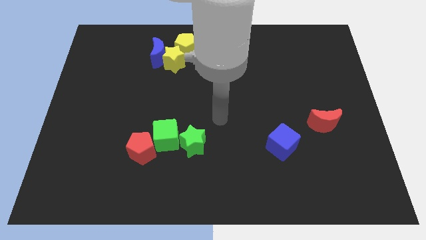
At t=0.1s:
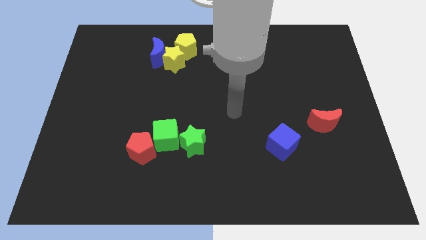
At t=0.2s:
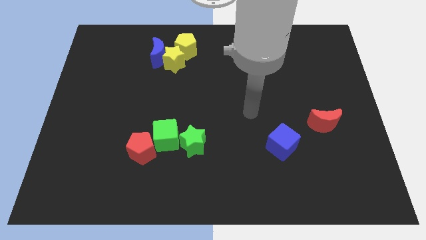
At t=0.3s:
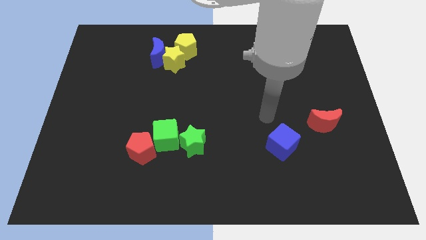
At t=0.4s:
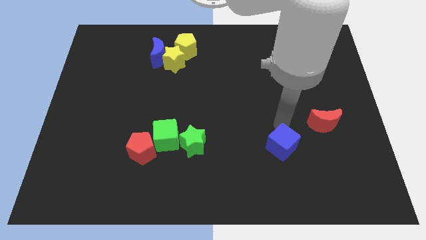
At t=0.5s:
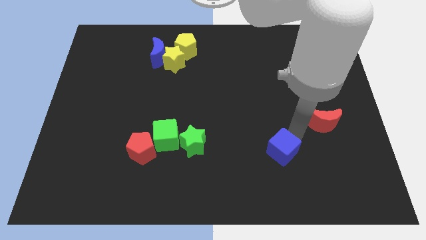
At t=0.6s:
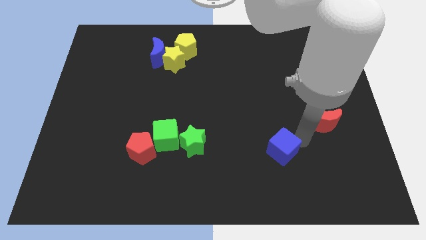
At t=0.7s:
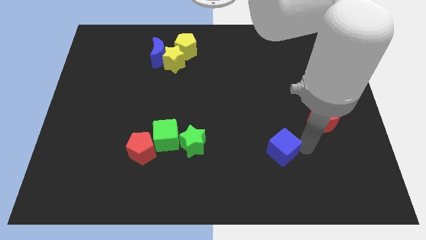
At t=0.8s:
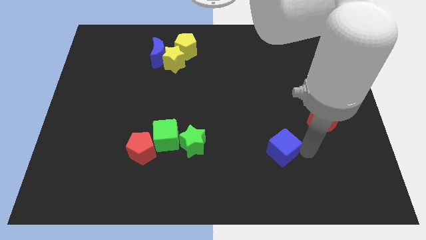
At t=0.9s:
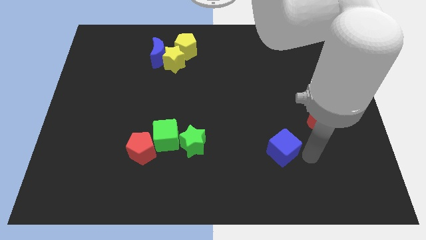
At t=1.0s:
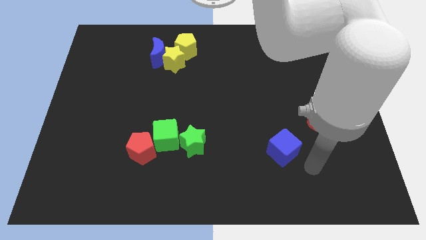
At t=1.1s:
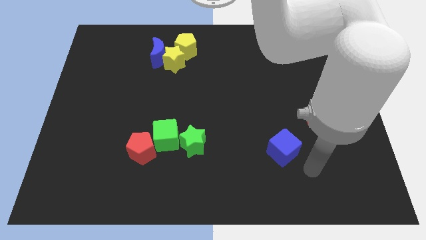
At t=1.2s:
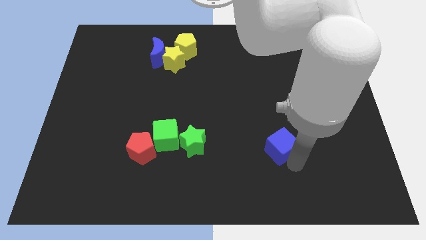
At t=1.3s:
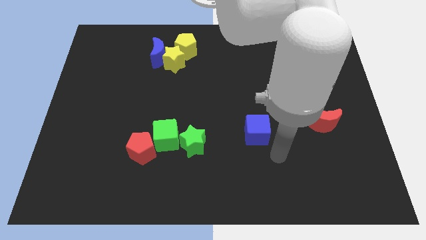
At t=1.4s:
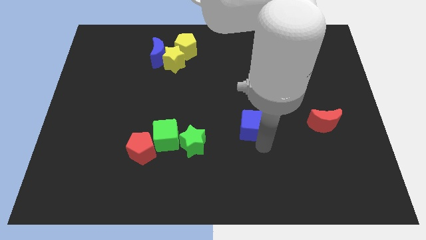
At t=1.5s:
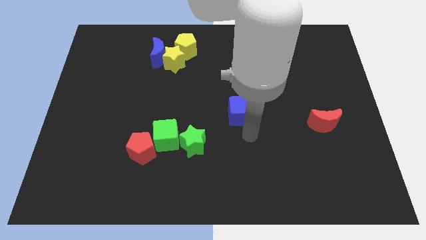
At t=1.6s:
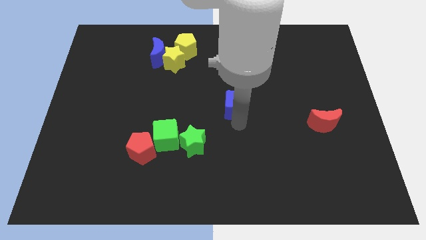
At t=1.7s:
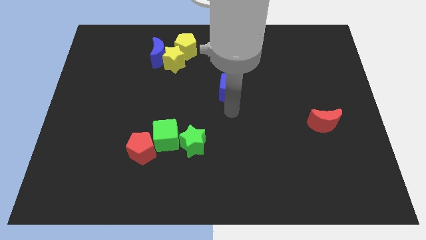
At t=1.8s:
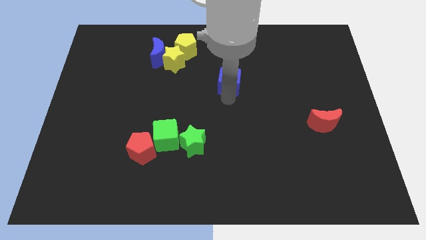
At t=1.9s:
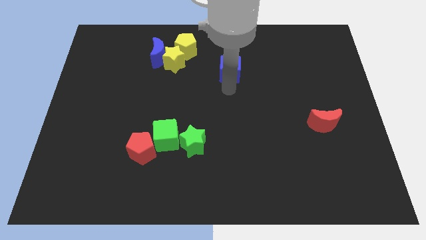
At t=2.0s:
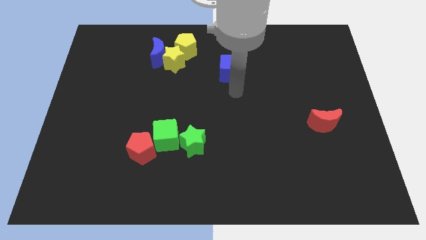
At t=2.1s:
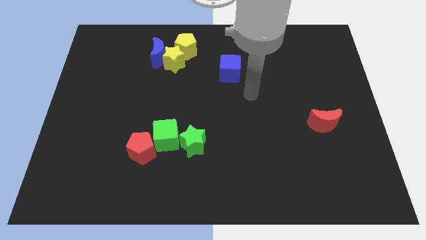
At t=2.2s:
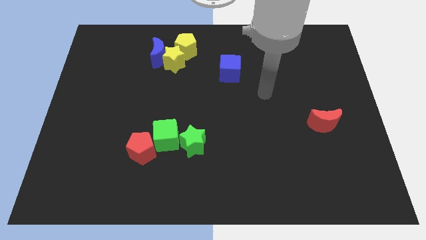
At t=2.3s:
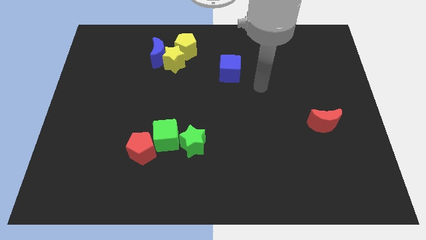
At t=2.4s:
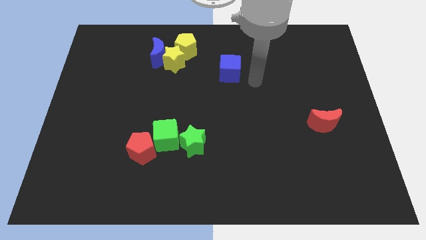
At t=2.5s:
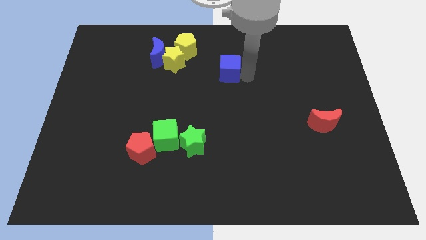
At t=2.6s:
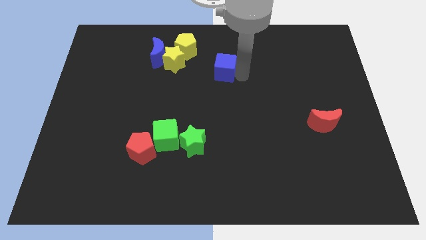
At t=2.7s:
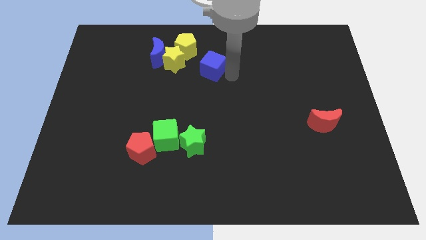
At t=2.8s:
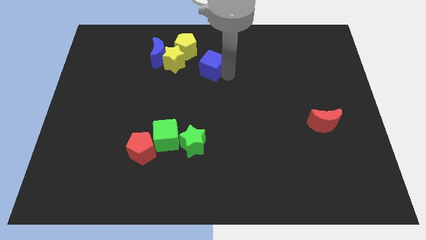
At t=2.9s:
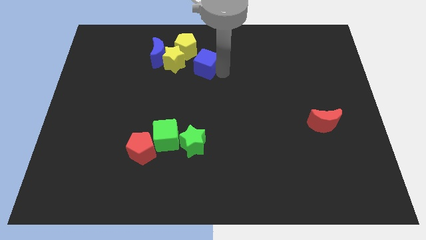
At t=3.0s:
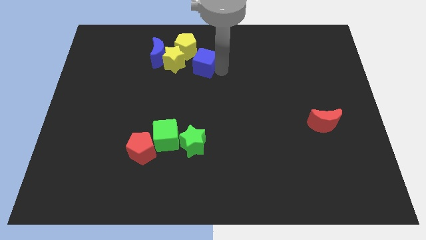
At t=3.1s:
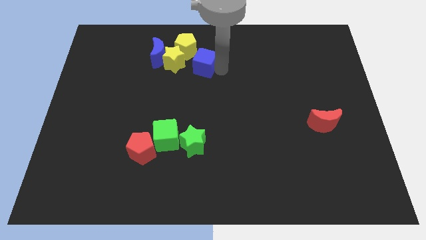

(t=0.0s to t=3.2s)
slide the blue cube towards the yellow star

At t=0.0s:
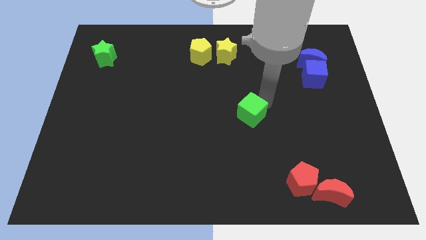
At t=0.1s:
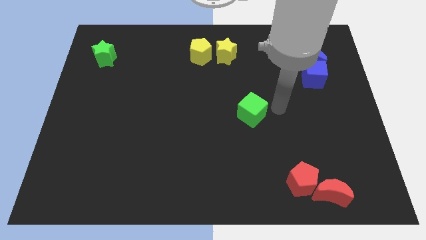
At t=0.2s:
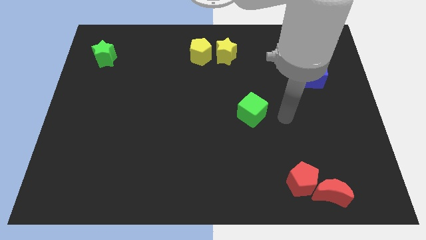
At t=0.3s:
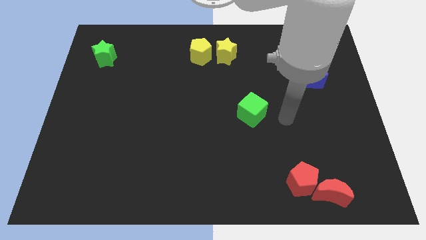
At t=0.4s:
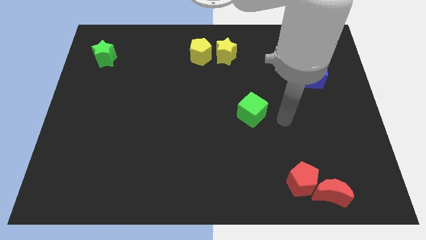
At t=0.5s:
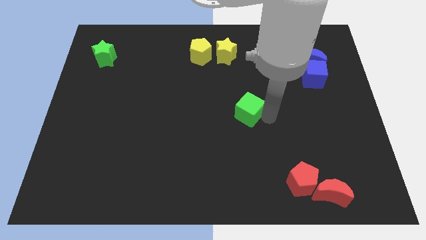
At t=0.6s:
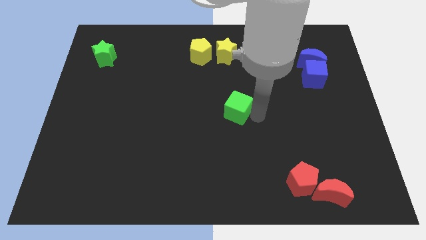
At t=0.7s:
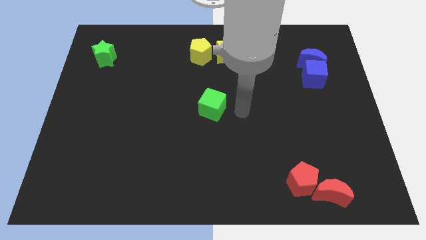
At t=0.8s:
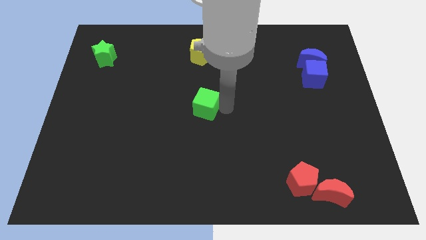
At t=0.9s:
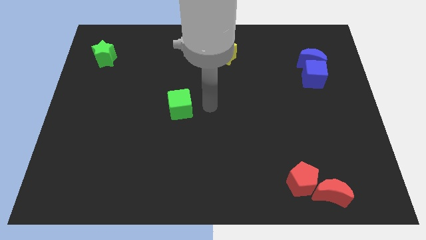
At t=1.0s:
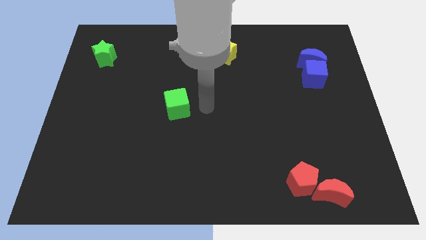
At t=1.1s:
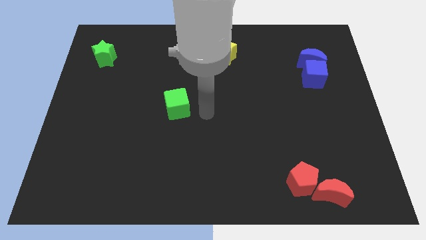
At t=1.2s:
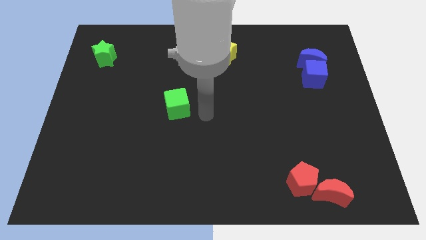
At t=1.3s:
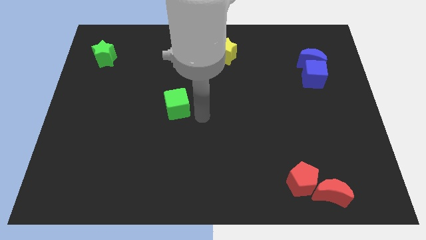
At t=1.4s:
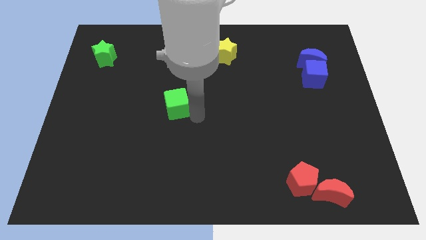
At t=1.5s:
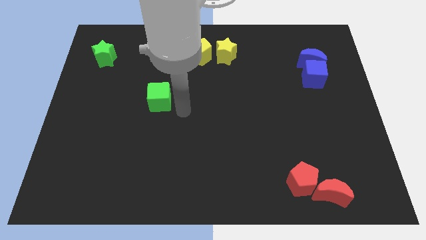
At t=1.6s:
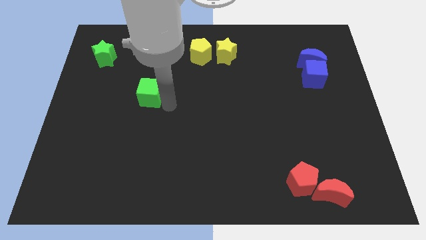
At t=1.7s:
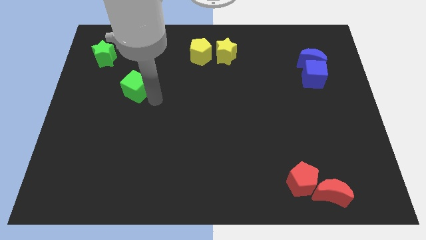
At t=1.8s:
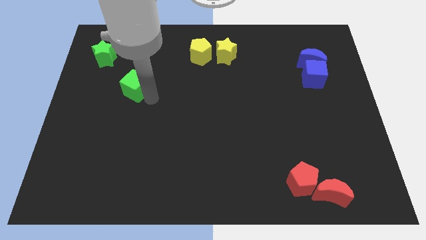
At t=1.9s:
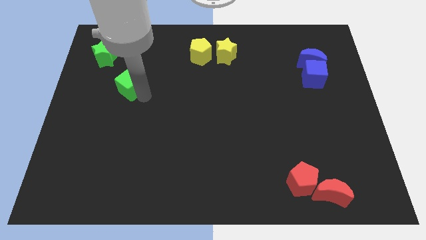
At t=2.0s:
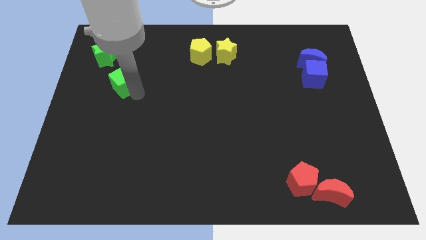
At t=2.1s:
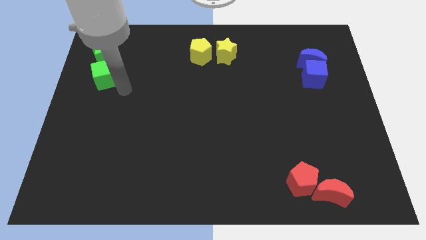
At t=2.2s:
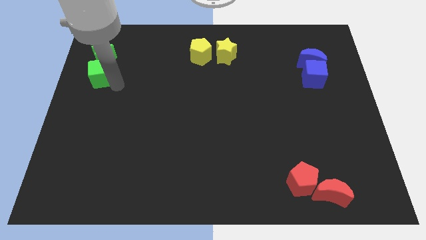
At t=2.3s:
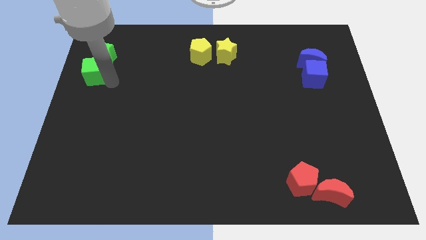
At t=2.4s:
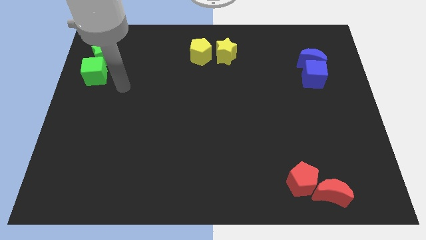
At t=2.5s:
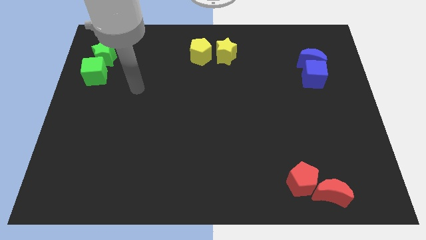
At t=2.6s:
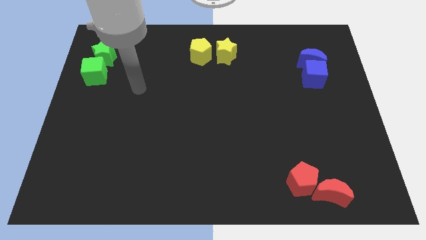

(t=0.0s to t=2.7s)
push the green cube to the bottom of the green star

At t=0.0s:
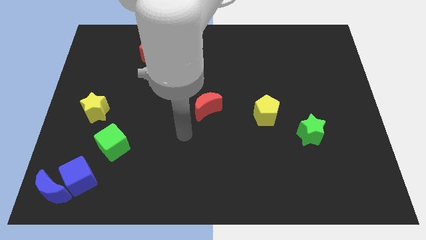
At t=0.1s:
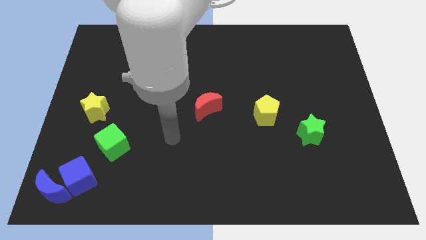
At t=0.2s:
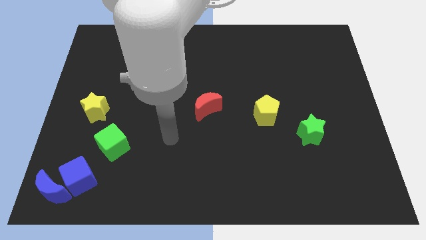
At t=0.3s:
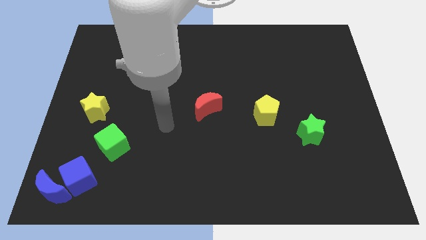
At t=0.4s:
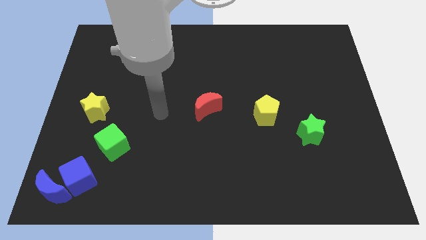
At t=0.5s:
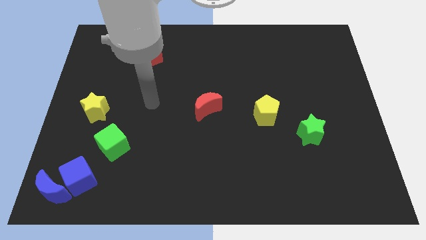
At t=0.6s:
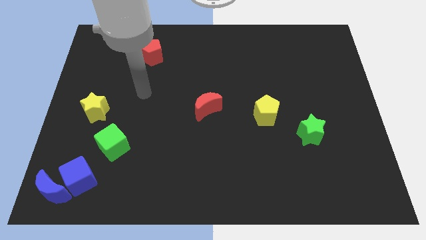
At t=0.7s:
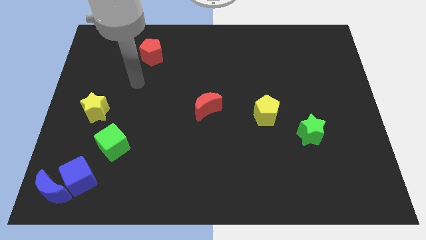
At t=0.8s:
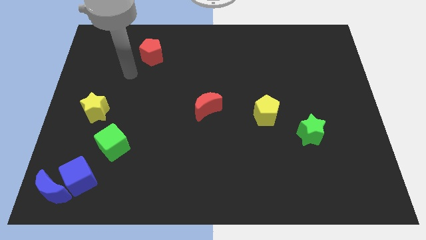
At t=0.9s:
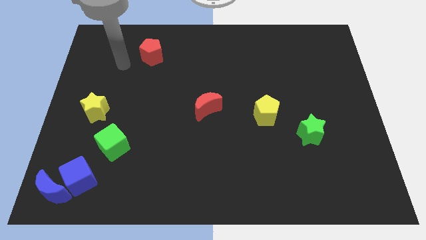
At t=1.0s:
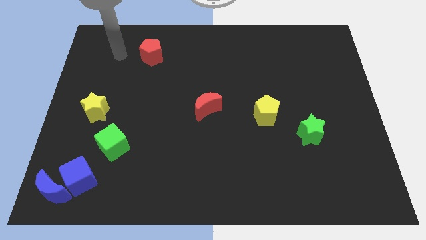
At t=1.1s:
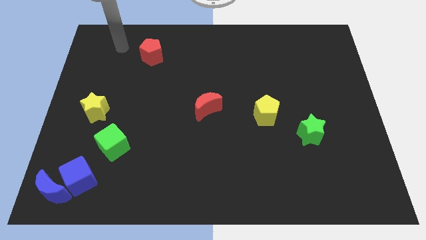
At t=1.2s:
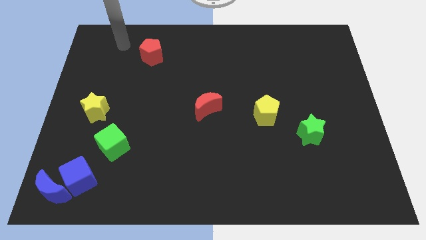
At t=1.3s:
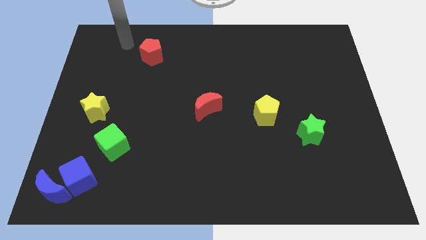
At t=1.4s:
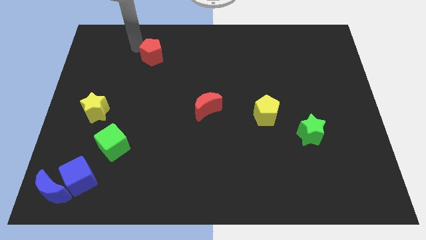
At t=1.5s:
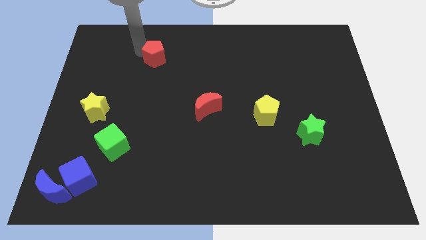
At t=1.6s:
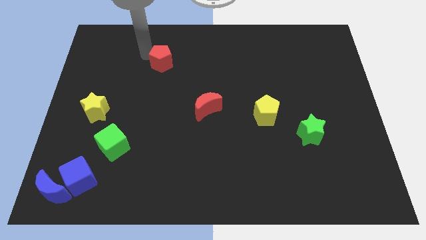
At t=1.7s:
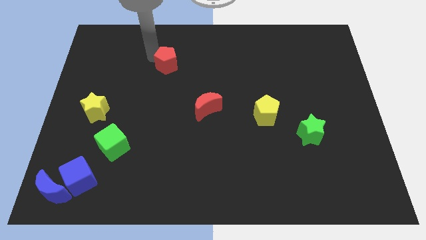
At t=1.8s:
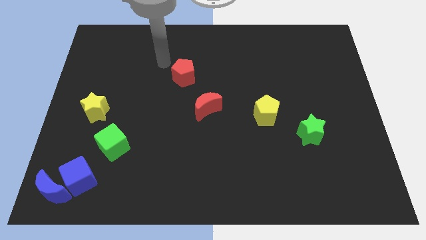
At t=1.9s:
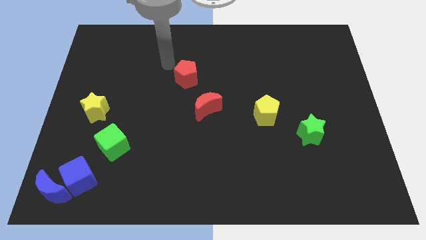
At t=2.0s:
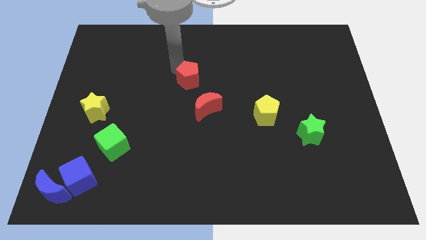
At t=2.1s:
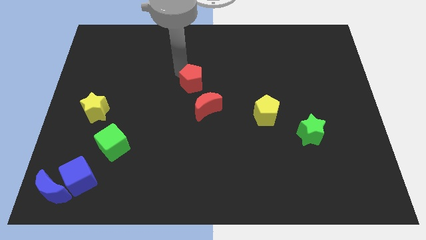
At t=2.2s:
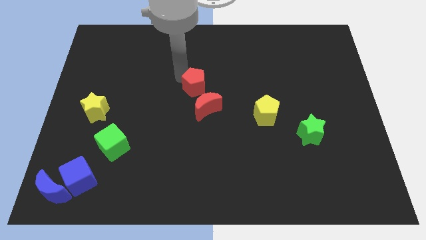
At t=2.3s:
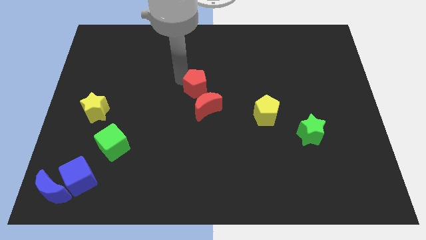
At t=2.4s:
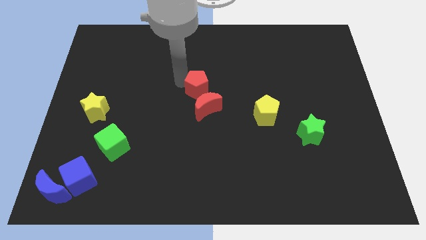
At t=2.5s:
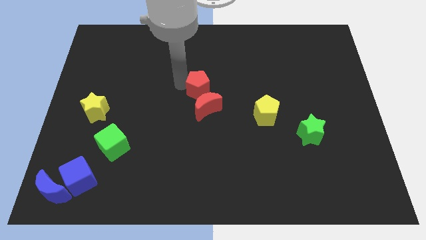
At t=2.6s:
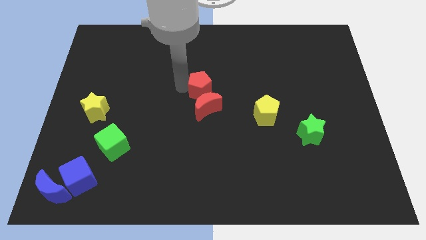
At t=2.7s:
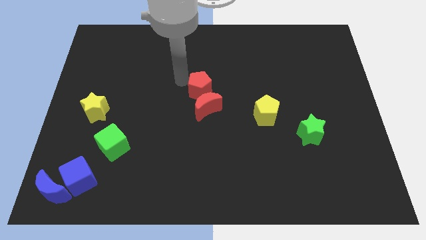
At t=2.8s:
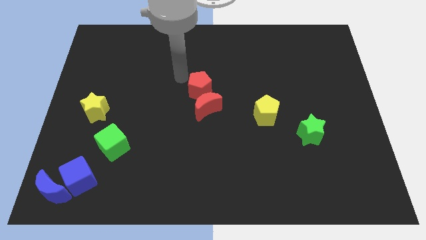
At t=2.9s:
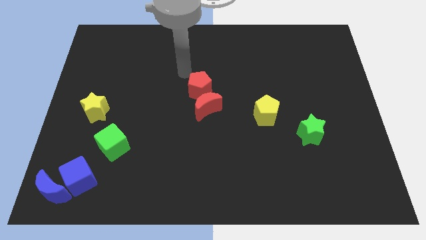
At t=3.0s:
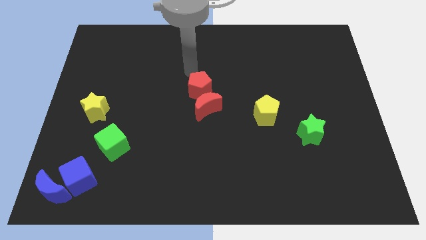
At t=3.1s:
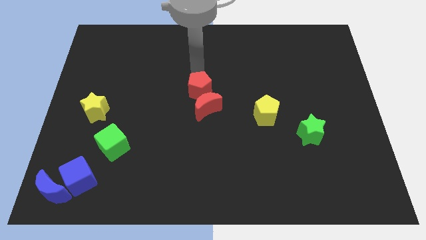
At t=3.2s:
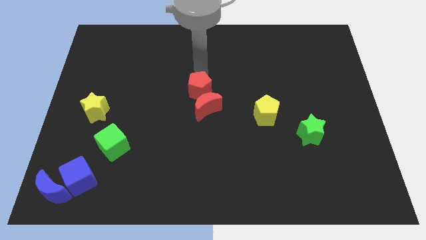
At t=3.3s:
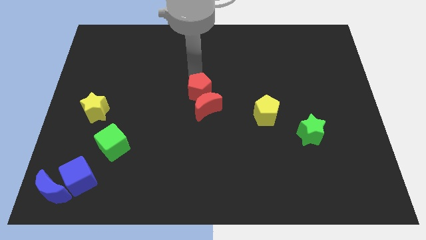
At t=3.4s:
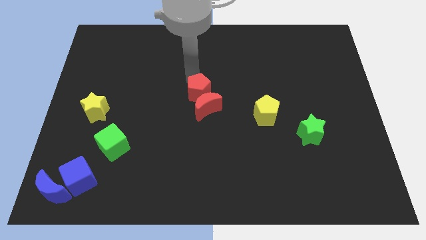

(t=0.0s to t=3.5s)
move the red pentagon into the red moon
